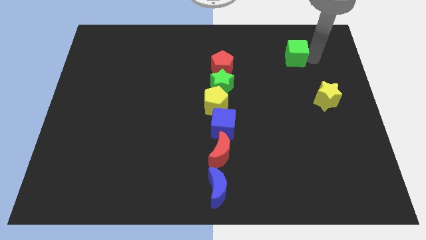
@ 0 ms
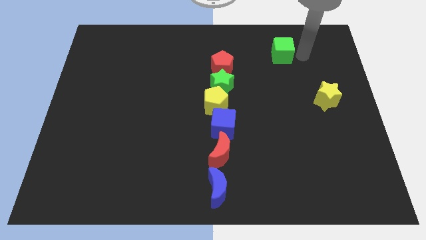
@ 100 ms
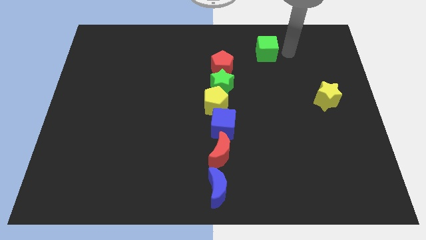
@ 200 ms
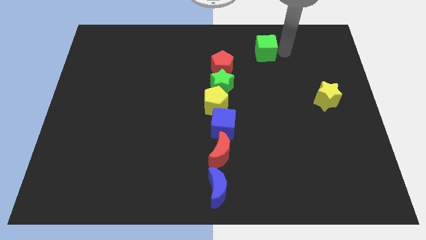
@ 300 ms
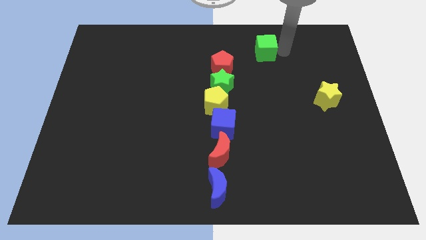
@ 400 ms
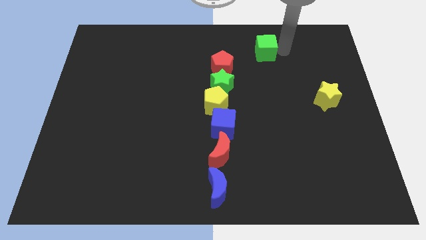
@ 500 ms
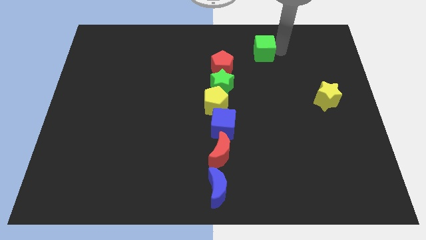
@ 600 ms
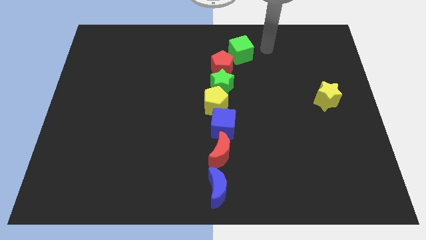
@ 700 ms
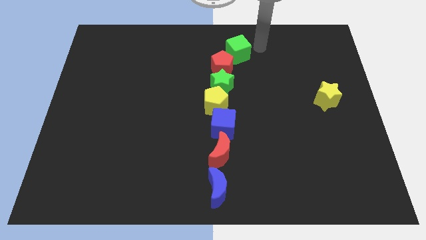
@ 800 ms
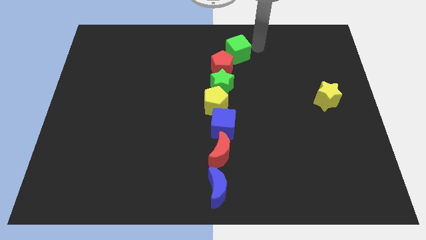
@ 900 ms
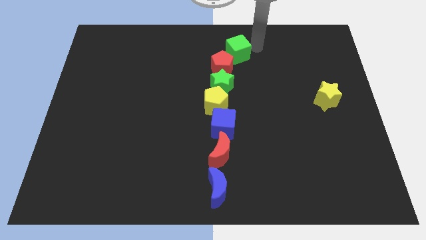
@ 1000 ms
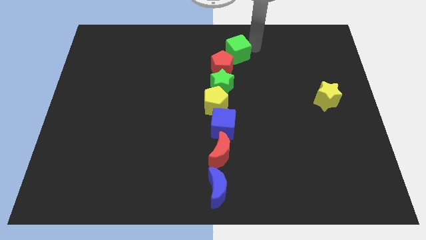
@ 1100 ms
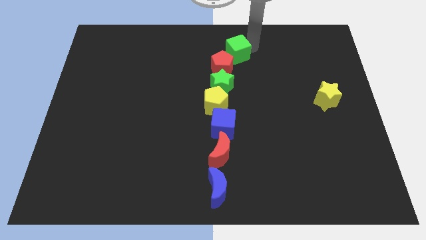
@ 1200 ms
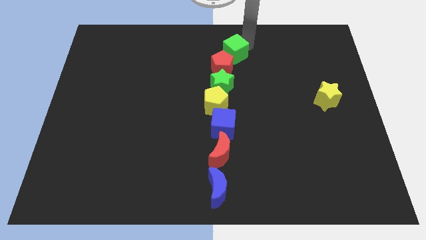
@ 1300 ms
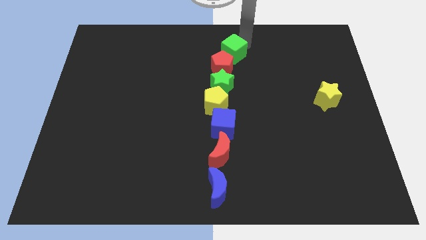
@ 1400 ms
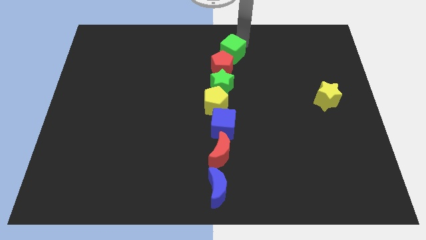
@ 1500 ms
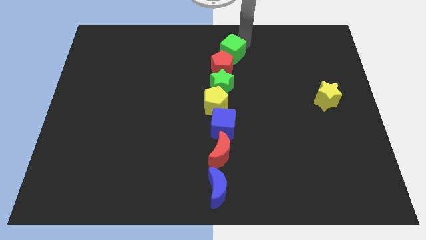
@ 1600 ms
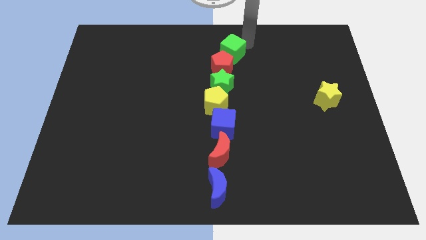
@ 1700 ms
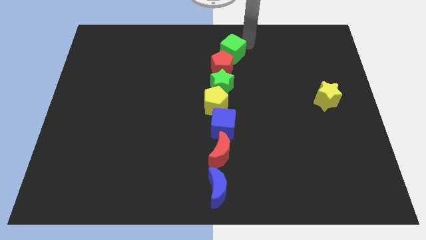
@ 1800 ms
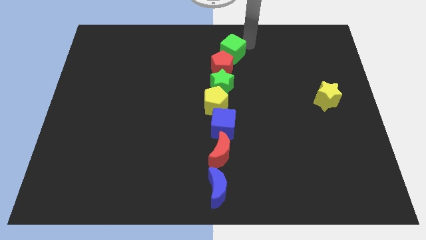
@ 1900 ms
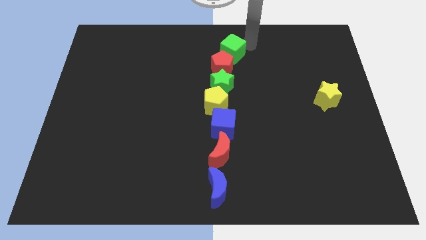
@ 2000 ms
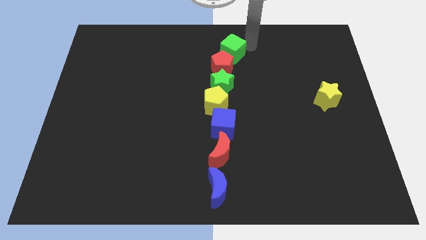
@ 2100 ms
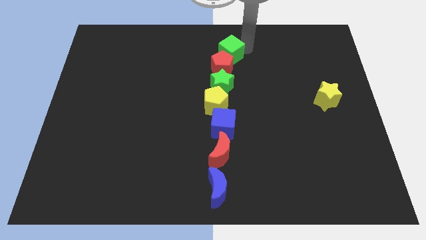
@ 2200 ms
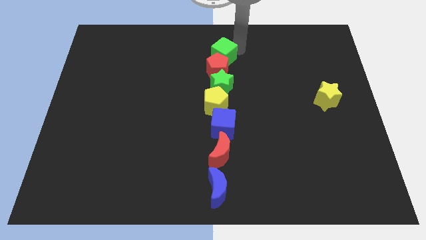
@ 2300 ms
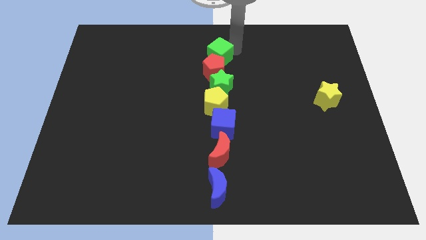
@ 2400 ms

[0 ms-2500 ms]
push the green cube diagonally top right to the red pentagon

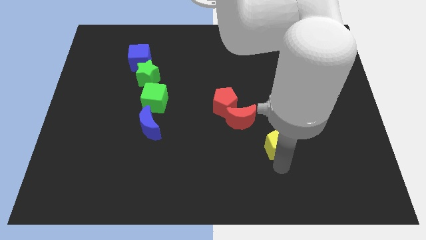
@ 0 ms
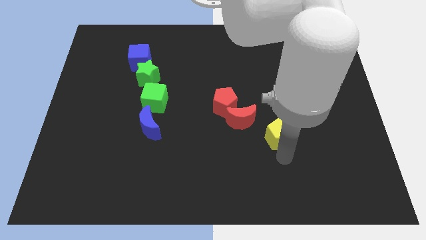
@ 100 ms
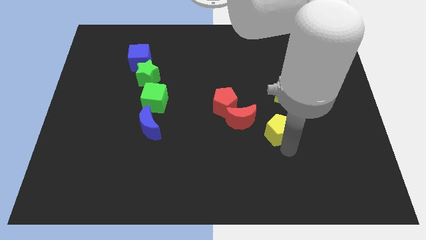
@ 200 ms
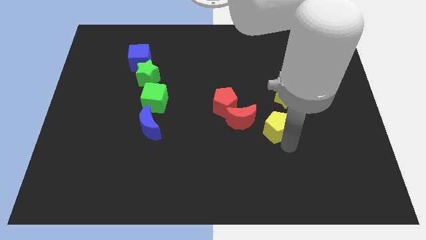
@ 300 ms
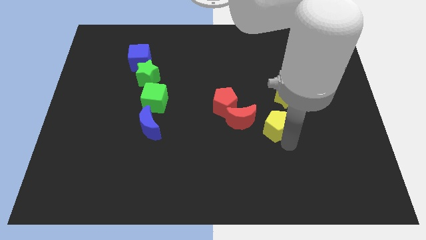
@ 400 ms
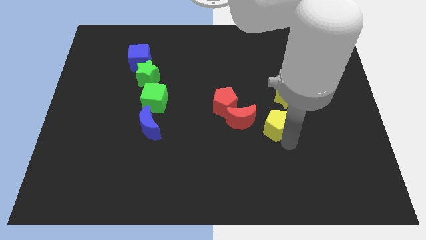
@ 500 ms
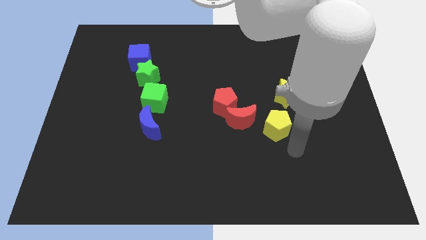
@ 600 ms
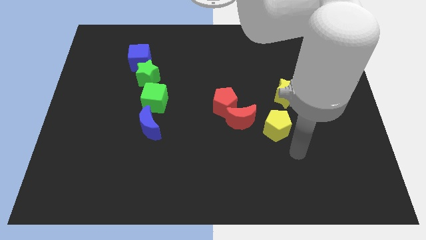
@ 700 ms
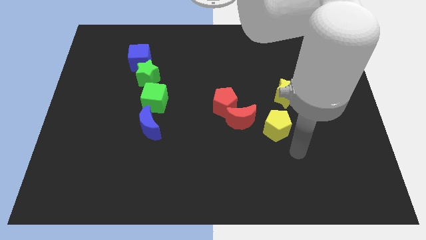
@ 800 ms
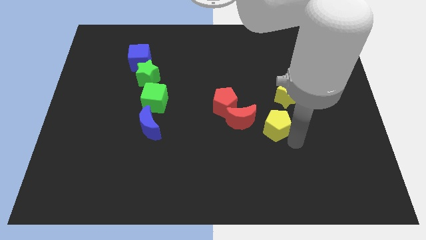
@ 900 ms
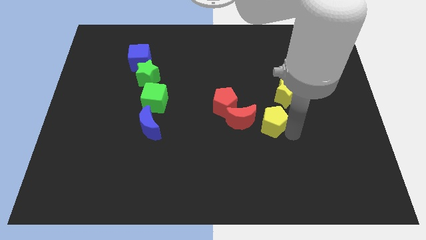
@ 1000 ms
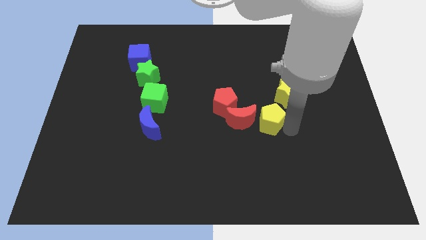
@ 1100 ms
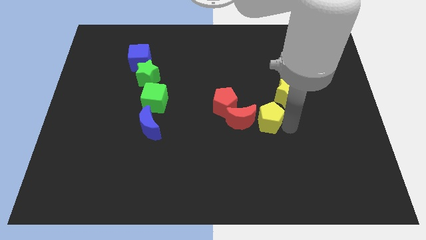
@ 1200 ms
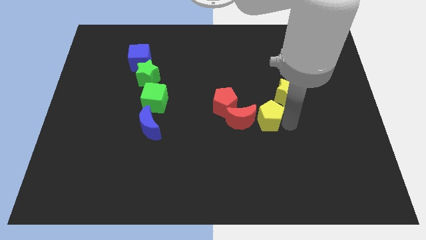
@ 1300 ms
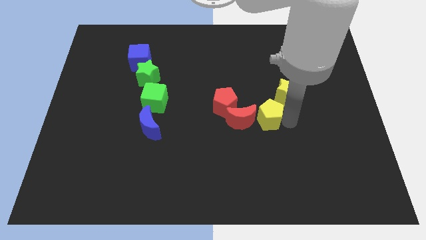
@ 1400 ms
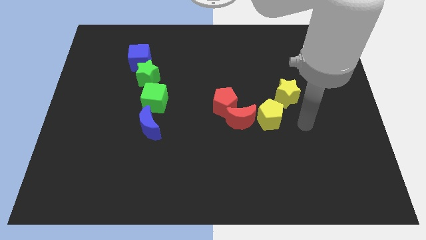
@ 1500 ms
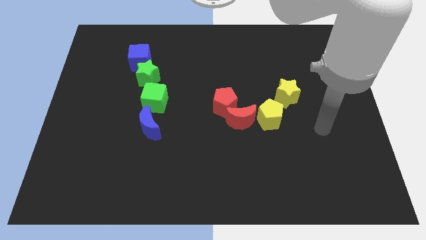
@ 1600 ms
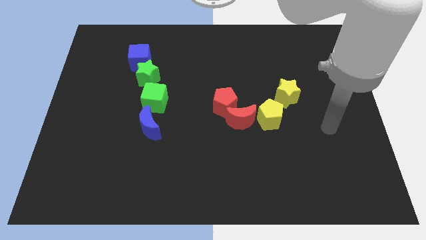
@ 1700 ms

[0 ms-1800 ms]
place yellow pentagon in between yellow star and red moon

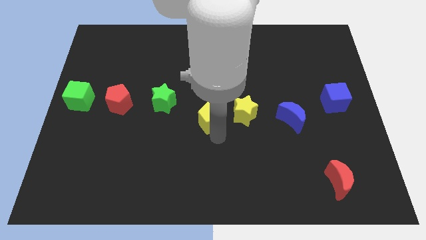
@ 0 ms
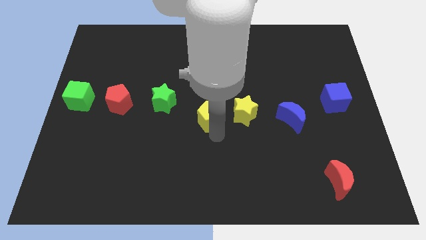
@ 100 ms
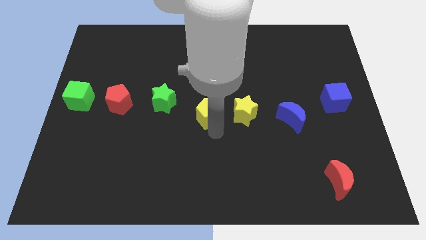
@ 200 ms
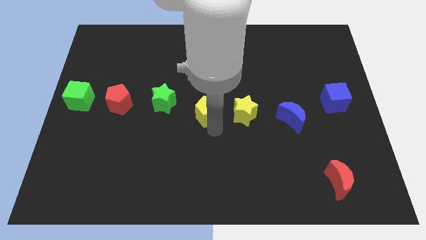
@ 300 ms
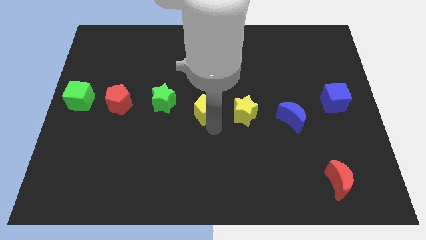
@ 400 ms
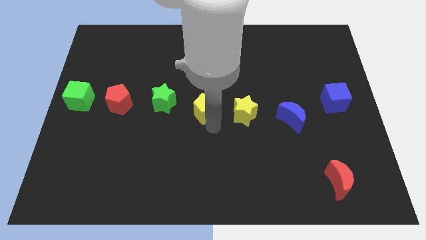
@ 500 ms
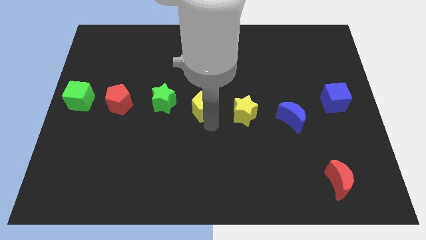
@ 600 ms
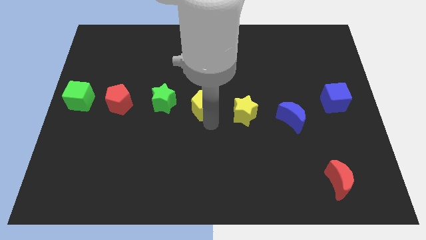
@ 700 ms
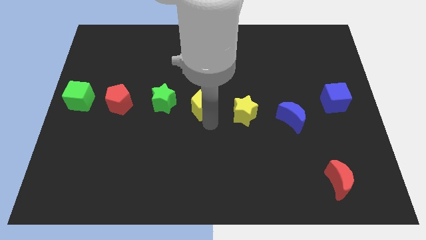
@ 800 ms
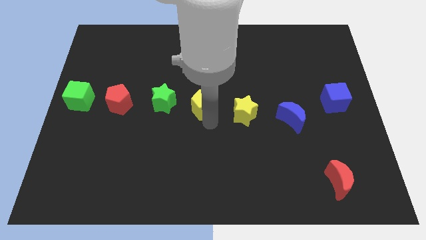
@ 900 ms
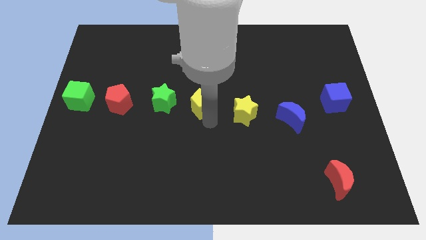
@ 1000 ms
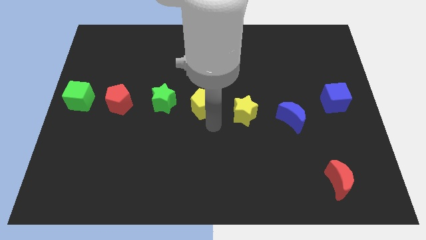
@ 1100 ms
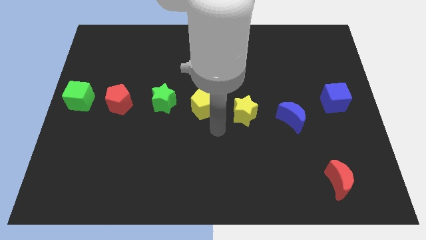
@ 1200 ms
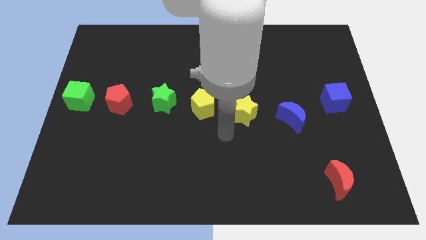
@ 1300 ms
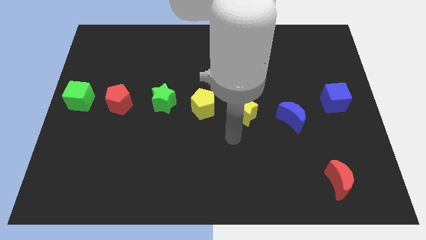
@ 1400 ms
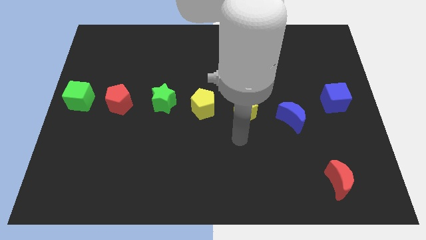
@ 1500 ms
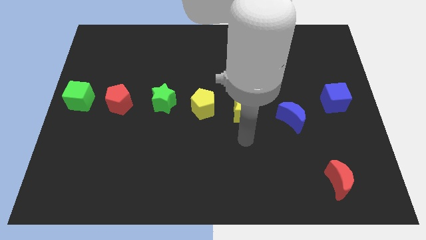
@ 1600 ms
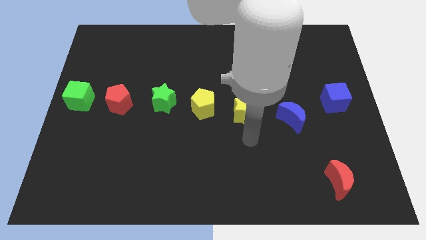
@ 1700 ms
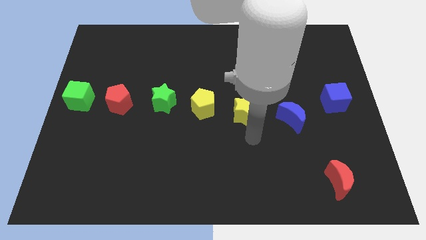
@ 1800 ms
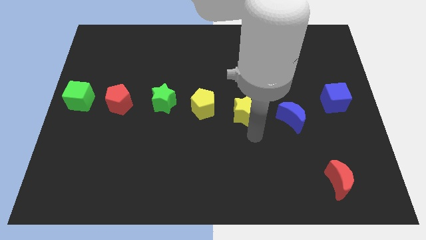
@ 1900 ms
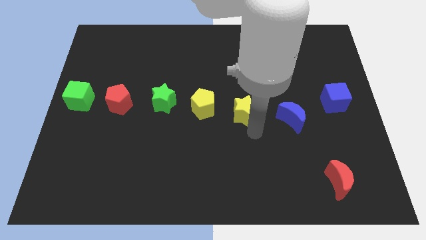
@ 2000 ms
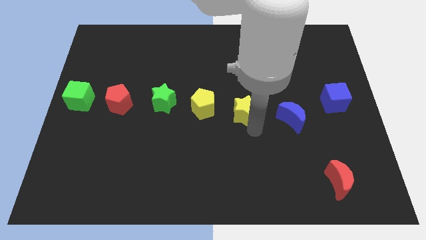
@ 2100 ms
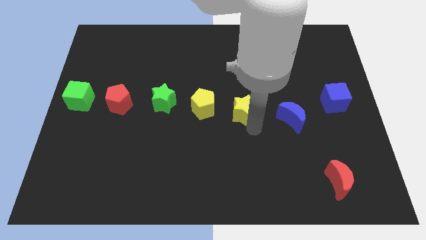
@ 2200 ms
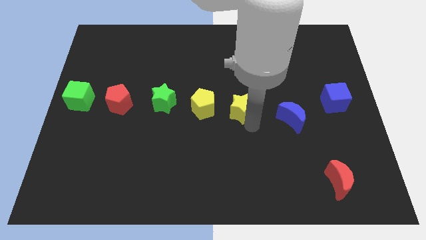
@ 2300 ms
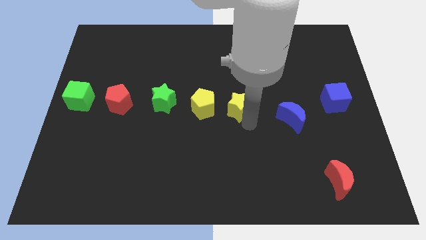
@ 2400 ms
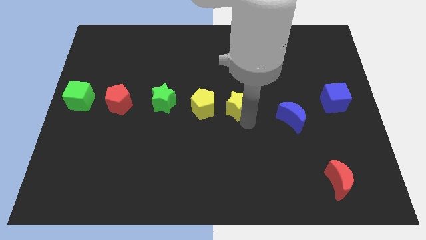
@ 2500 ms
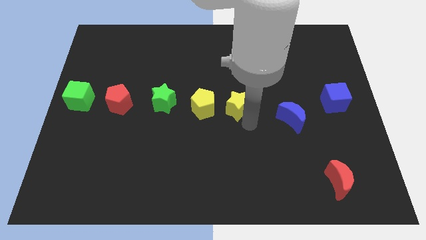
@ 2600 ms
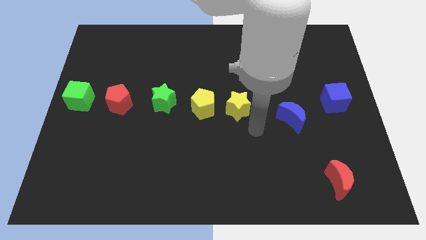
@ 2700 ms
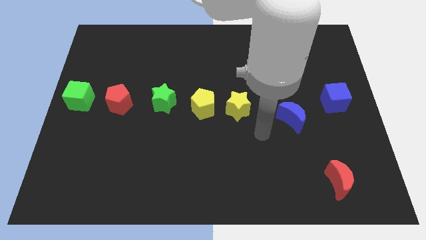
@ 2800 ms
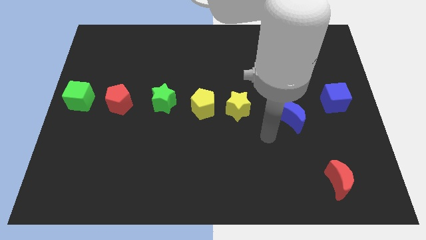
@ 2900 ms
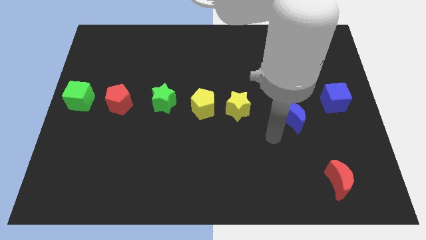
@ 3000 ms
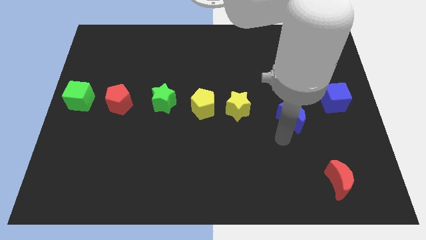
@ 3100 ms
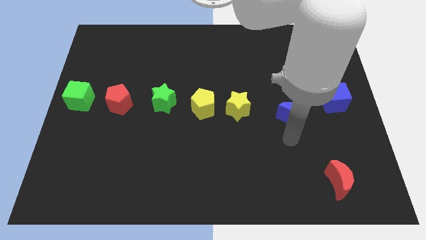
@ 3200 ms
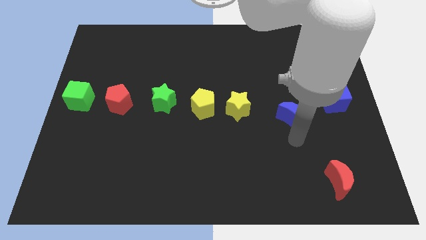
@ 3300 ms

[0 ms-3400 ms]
slightly push yellow star upwards

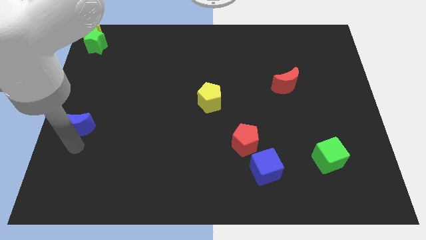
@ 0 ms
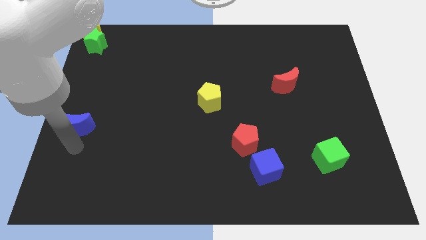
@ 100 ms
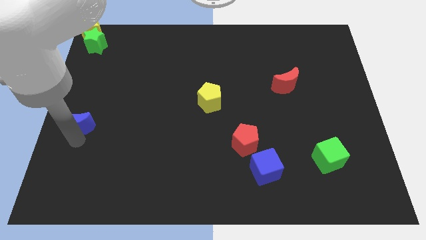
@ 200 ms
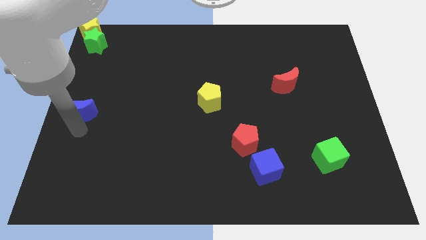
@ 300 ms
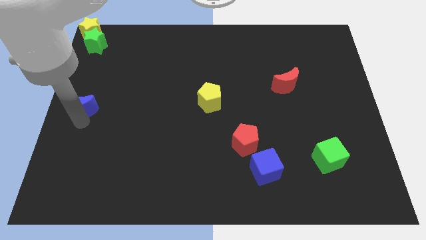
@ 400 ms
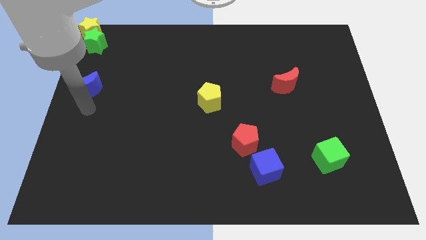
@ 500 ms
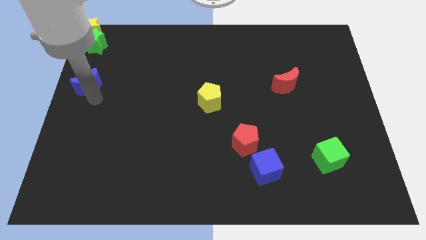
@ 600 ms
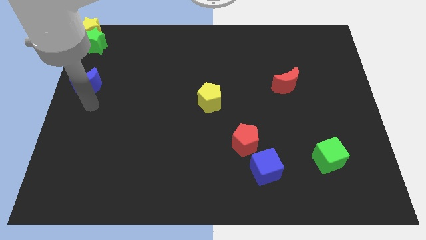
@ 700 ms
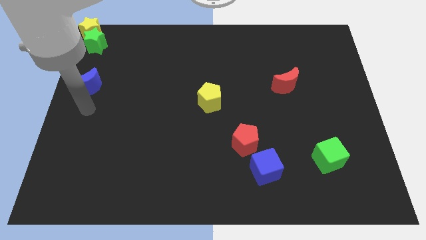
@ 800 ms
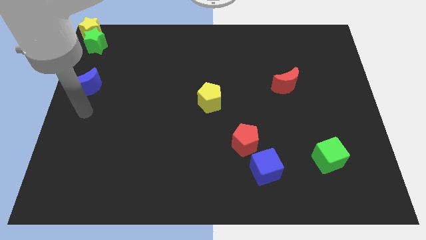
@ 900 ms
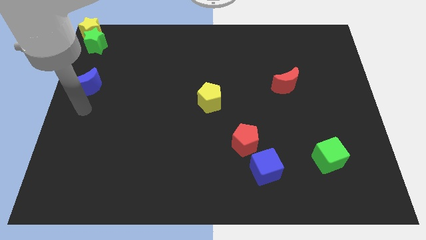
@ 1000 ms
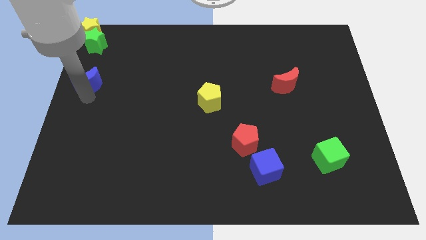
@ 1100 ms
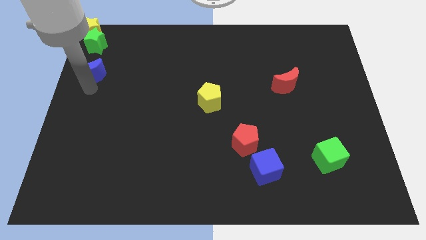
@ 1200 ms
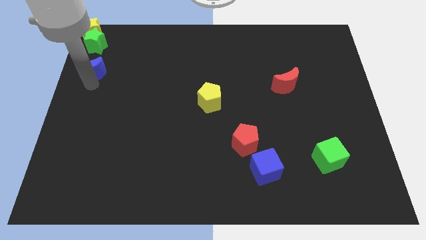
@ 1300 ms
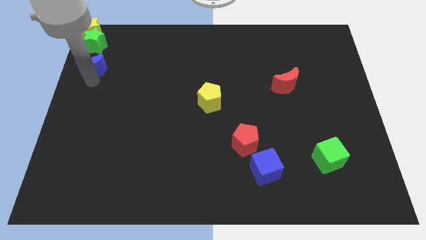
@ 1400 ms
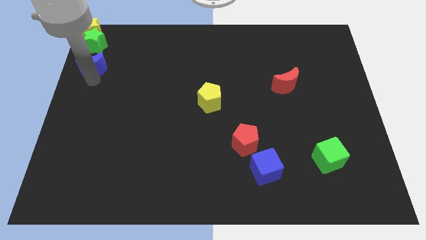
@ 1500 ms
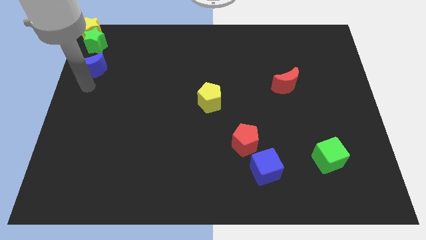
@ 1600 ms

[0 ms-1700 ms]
push the blue moon towards the bottom side of the green star
